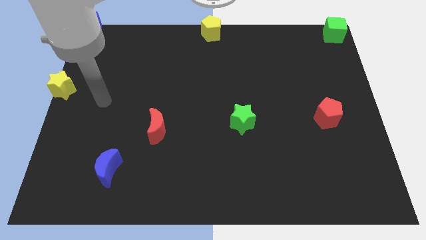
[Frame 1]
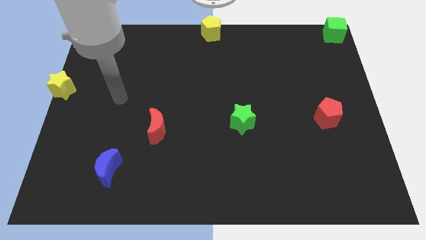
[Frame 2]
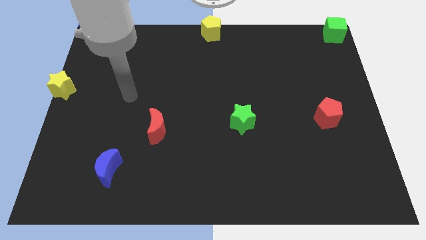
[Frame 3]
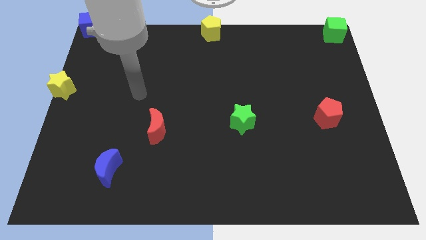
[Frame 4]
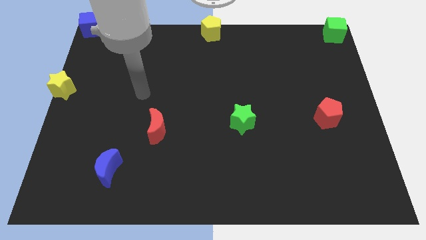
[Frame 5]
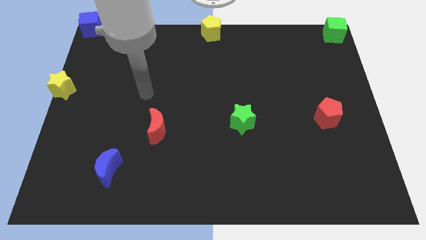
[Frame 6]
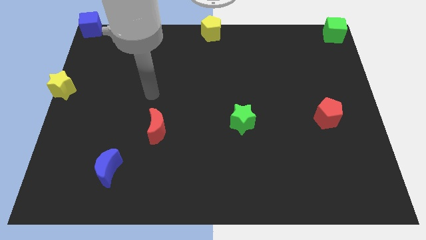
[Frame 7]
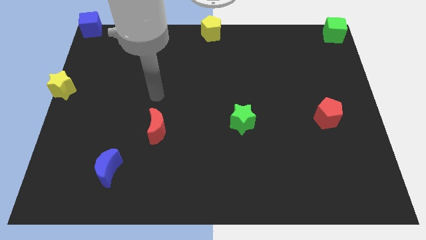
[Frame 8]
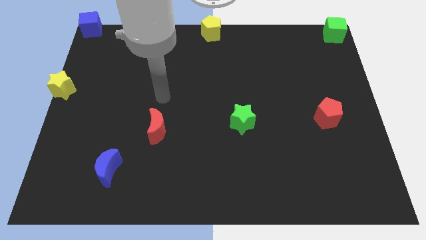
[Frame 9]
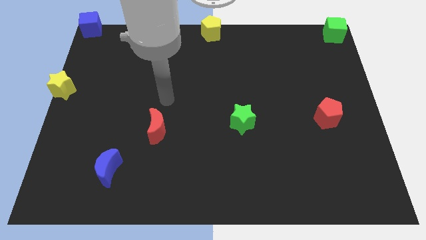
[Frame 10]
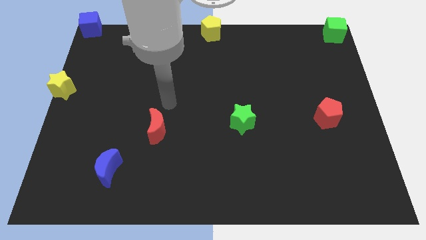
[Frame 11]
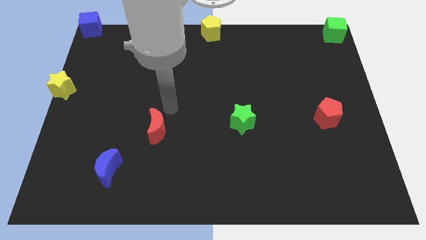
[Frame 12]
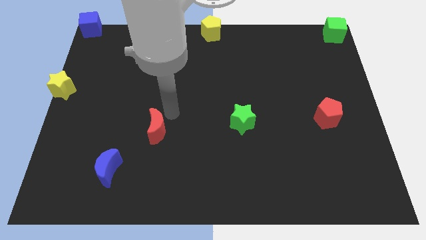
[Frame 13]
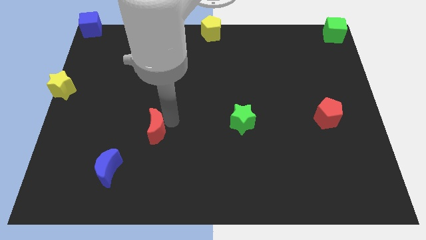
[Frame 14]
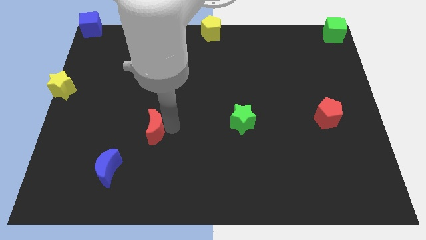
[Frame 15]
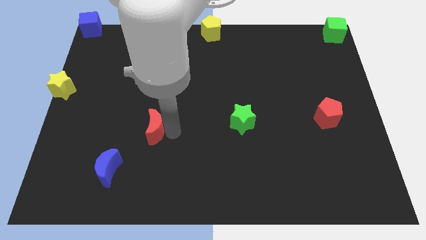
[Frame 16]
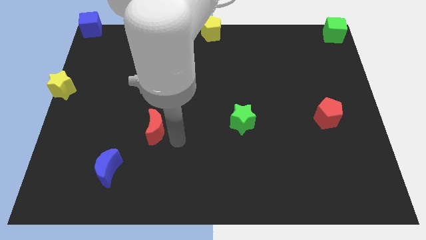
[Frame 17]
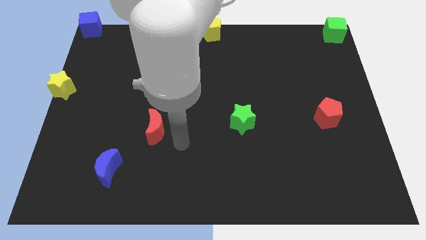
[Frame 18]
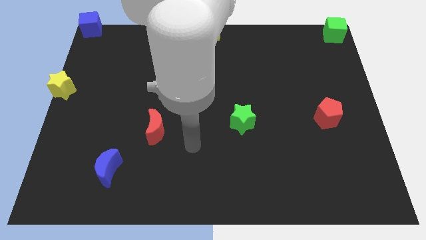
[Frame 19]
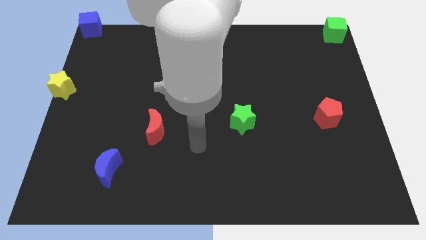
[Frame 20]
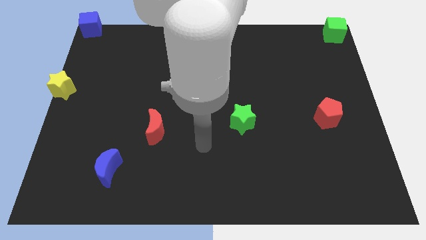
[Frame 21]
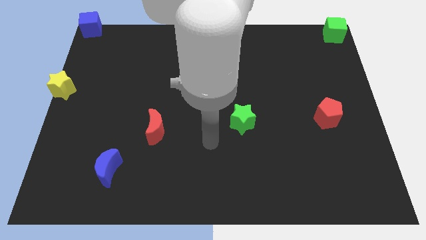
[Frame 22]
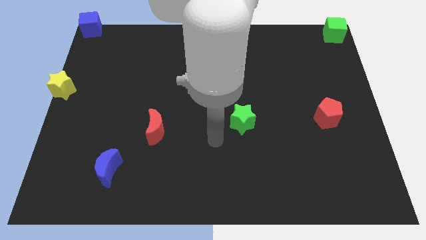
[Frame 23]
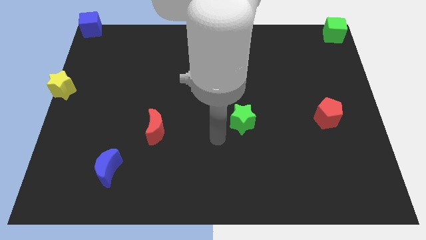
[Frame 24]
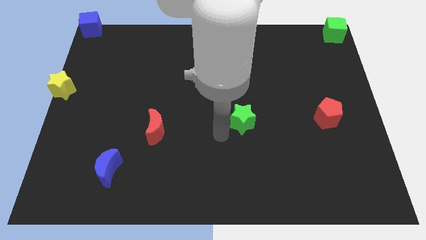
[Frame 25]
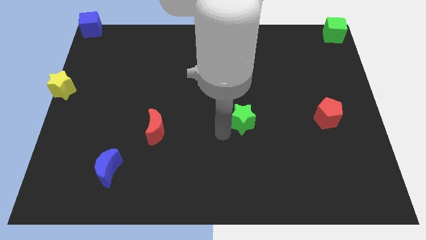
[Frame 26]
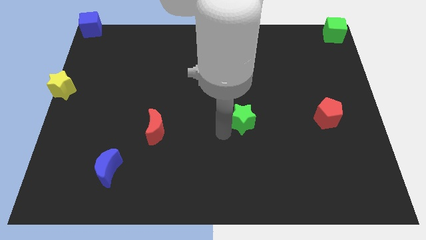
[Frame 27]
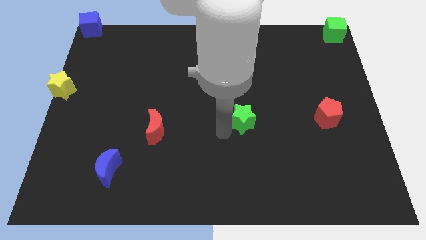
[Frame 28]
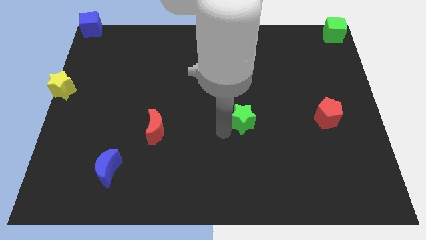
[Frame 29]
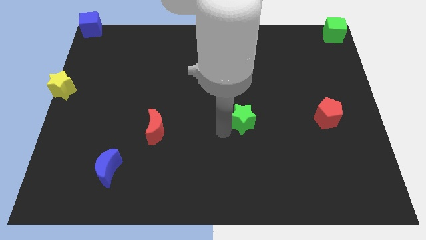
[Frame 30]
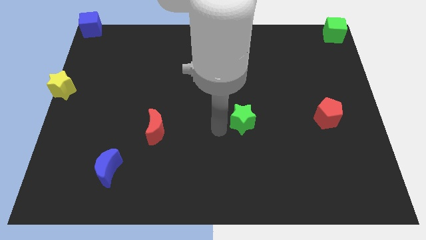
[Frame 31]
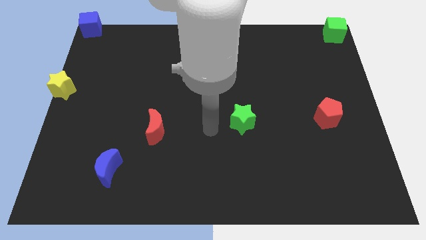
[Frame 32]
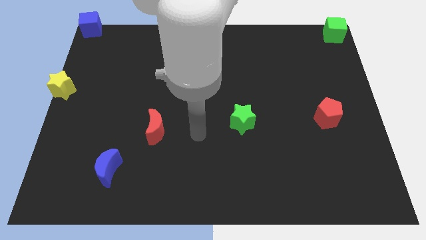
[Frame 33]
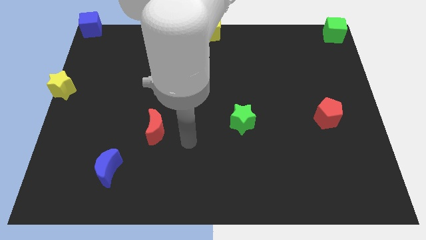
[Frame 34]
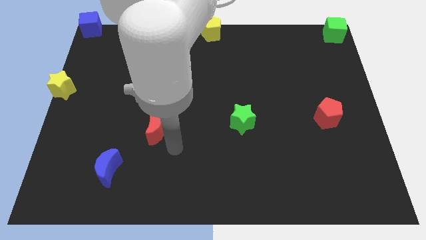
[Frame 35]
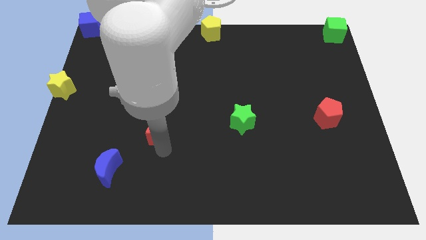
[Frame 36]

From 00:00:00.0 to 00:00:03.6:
move your arm towards the bottom of the red moon

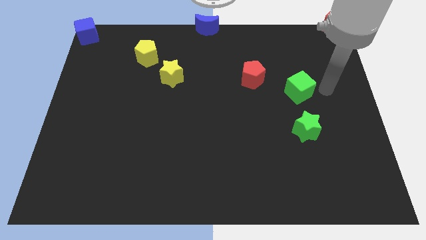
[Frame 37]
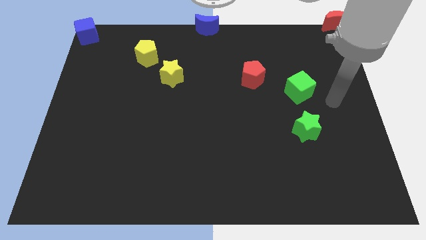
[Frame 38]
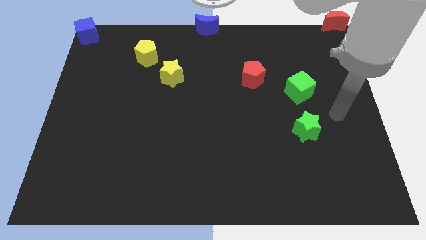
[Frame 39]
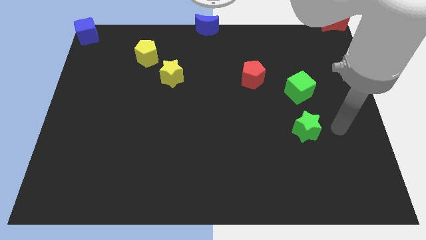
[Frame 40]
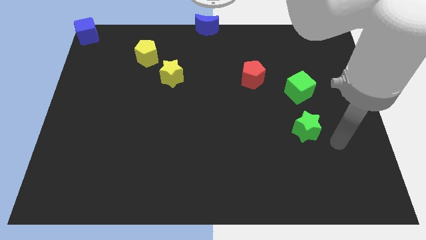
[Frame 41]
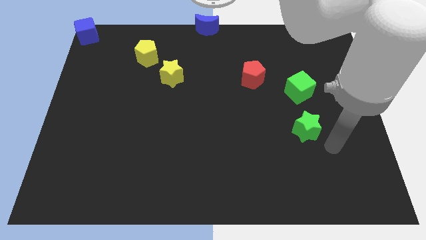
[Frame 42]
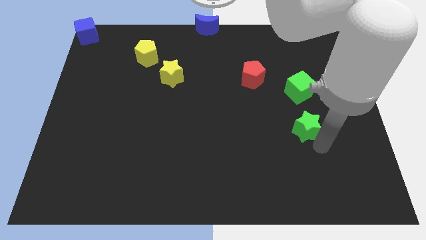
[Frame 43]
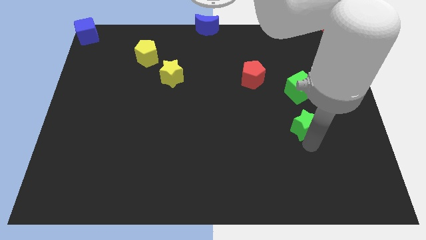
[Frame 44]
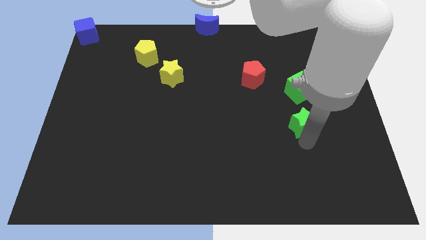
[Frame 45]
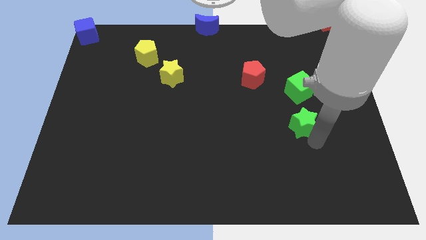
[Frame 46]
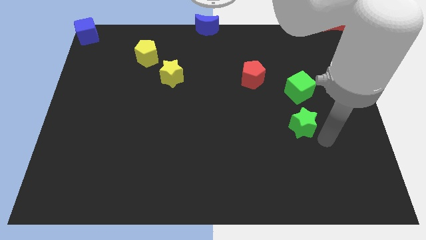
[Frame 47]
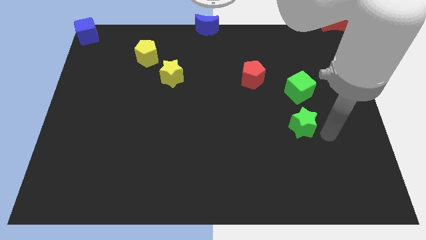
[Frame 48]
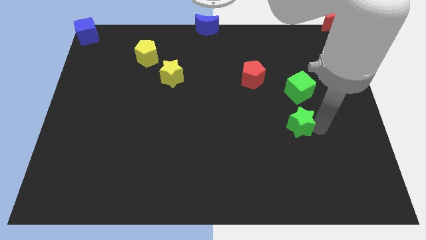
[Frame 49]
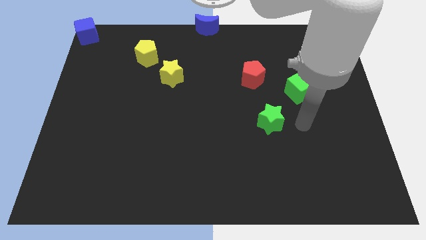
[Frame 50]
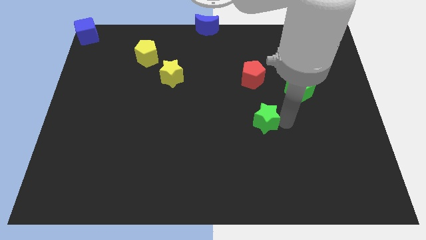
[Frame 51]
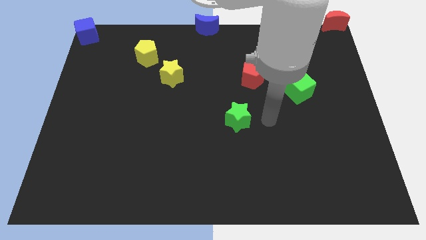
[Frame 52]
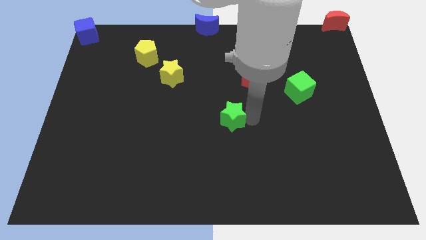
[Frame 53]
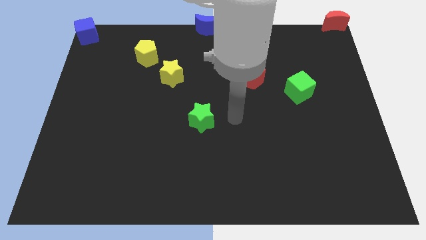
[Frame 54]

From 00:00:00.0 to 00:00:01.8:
move the green star to the center of the board

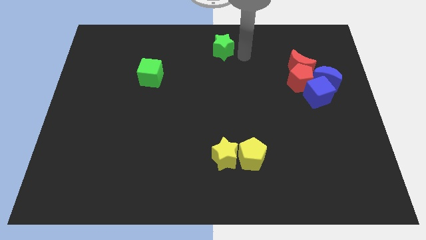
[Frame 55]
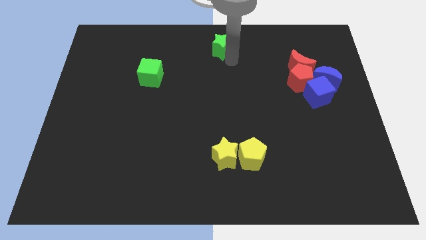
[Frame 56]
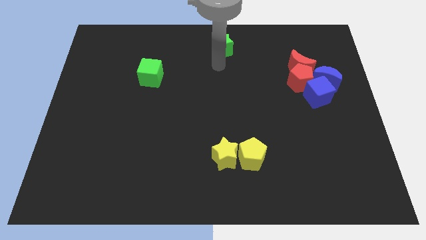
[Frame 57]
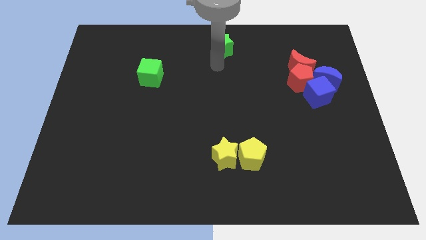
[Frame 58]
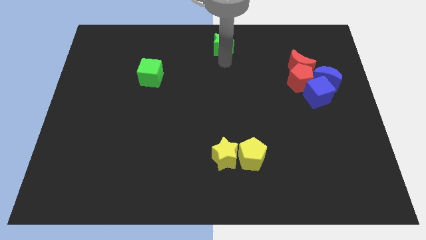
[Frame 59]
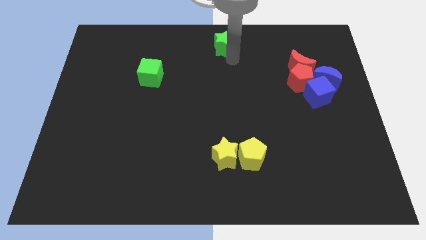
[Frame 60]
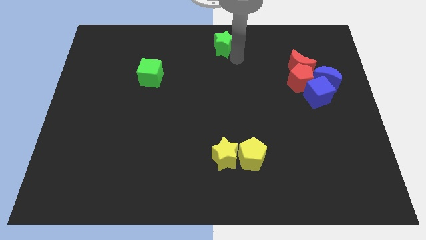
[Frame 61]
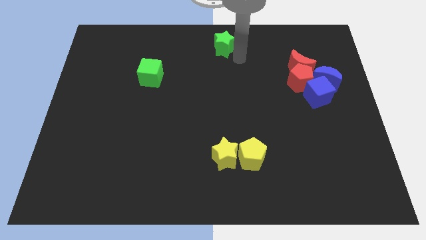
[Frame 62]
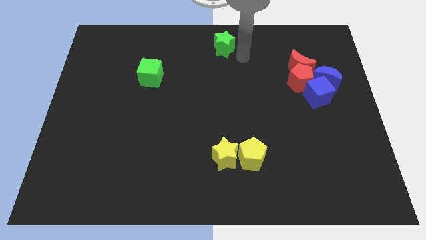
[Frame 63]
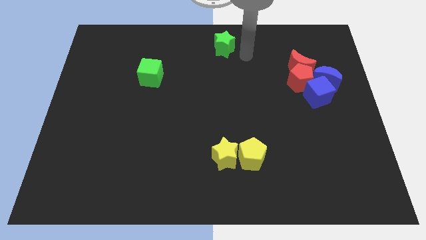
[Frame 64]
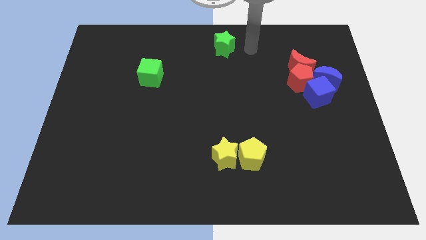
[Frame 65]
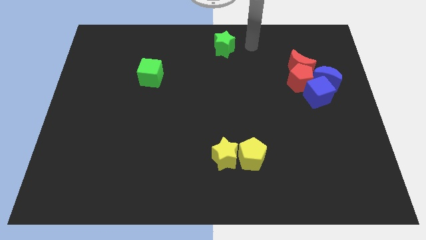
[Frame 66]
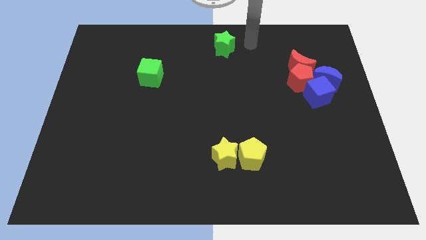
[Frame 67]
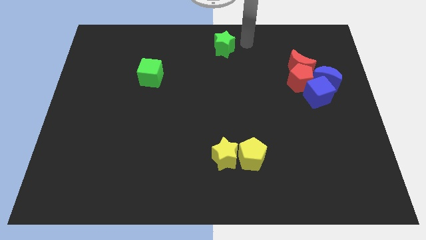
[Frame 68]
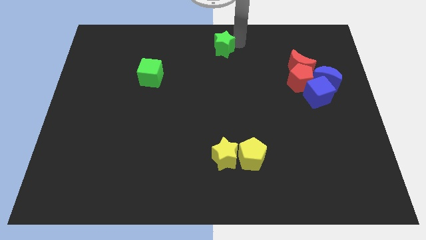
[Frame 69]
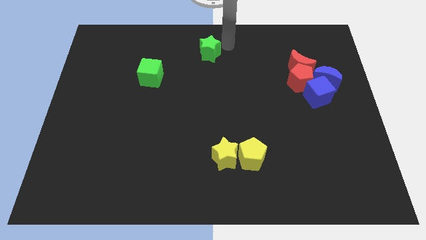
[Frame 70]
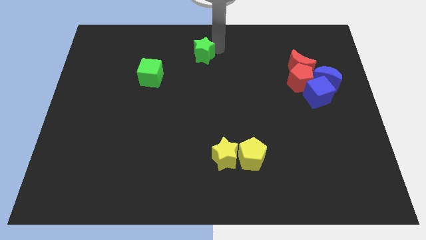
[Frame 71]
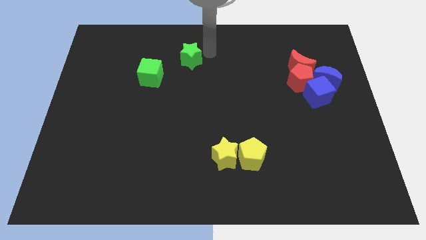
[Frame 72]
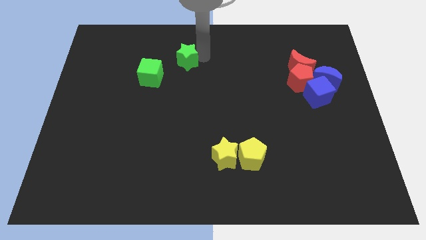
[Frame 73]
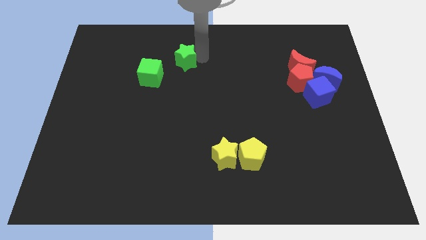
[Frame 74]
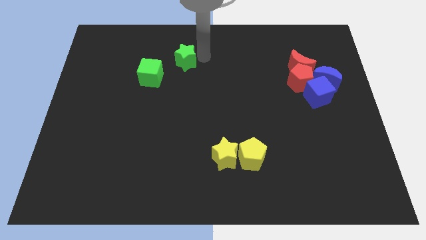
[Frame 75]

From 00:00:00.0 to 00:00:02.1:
move green star towards green cube

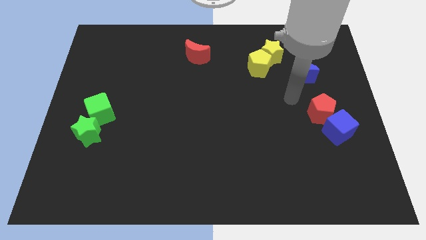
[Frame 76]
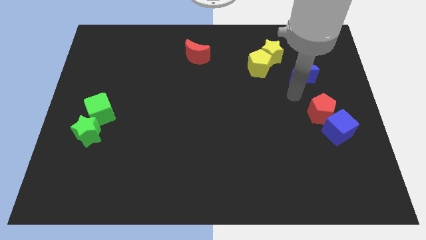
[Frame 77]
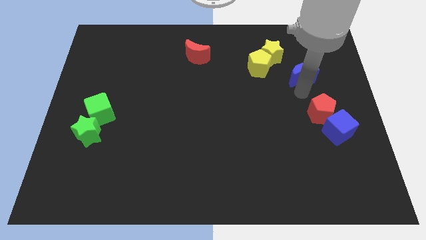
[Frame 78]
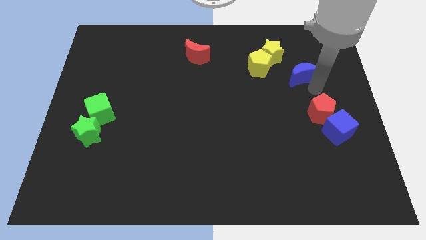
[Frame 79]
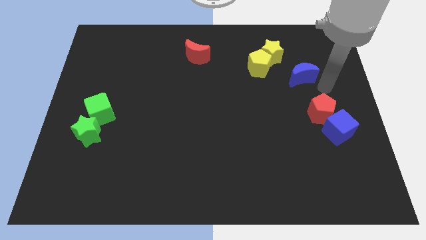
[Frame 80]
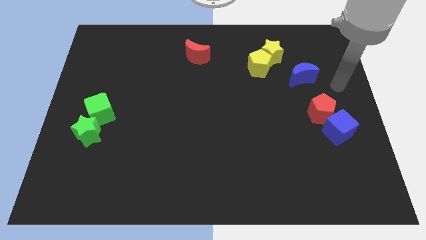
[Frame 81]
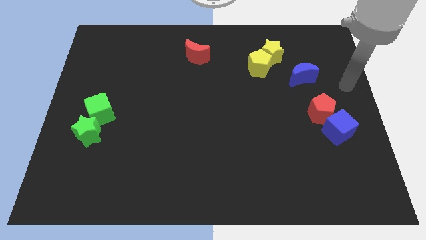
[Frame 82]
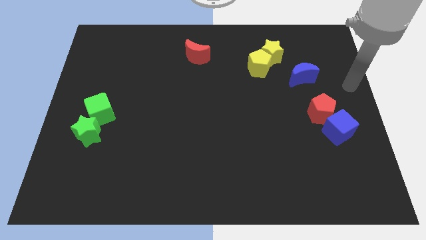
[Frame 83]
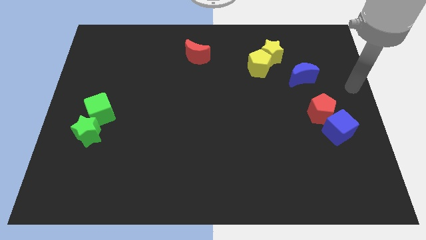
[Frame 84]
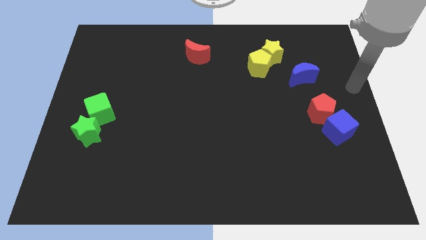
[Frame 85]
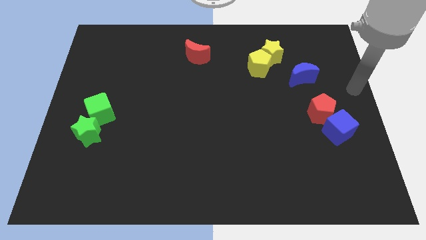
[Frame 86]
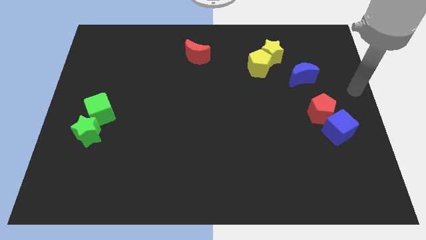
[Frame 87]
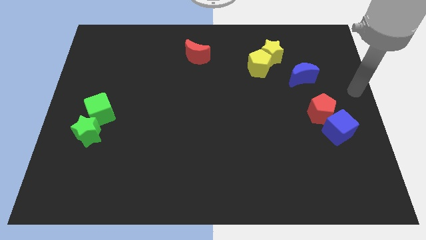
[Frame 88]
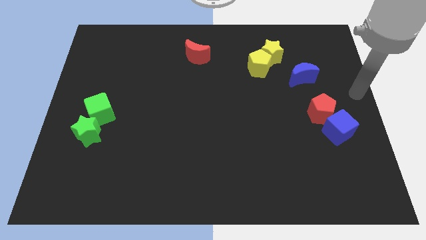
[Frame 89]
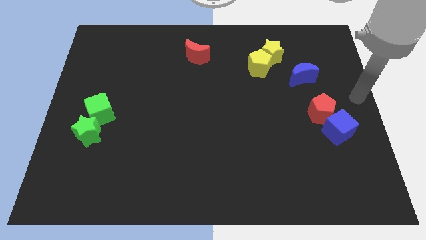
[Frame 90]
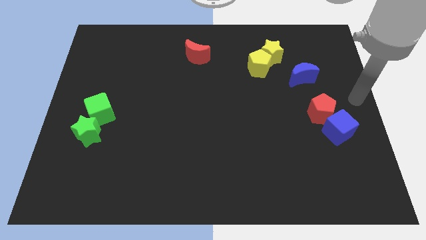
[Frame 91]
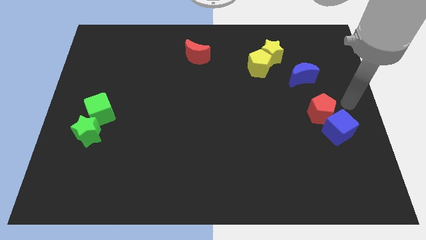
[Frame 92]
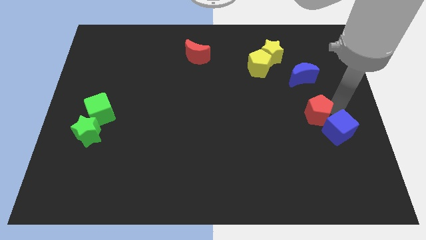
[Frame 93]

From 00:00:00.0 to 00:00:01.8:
move your arm close to the red pentagon
